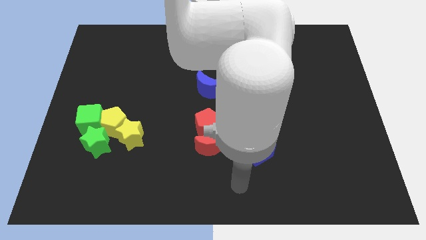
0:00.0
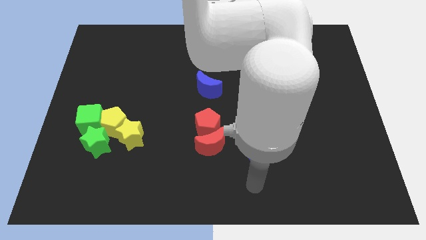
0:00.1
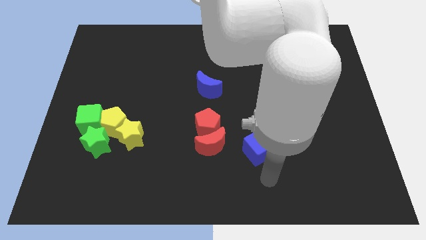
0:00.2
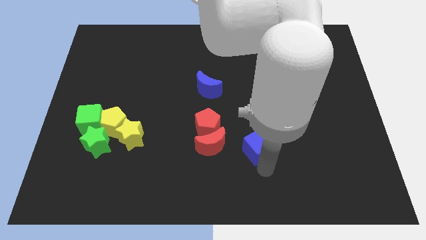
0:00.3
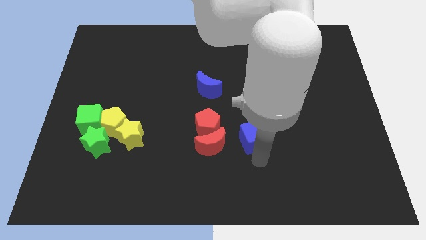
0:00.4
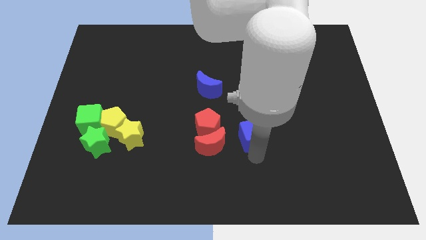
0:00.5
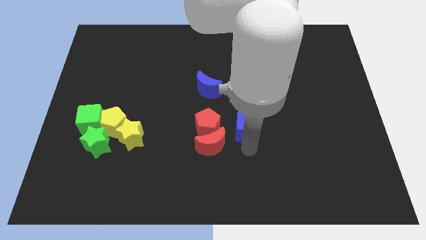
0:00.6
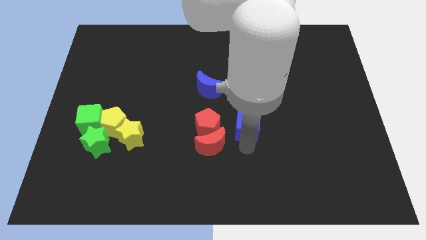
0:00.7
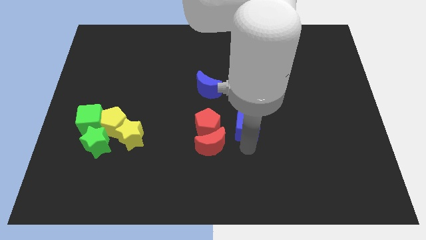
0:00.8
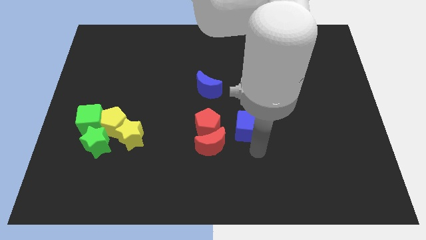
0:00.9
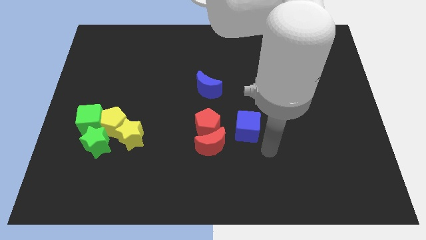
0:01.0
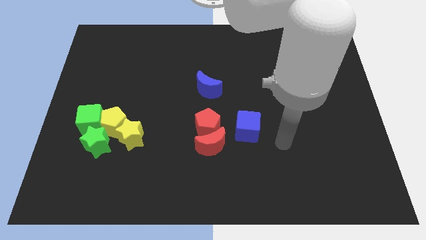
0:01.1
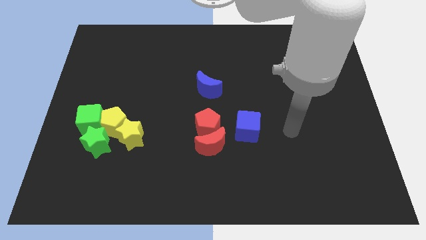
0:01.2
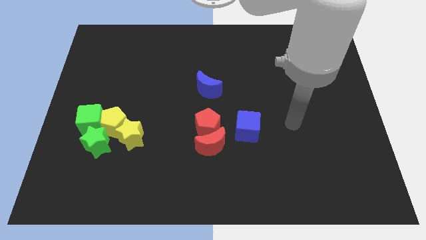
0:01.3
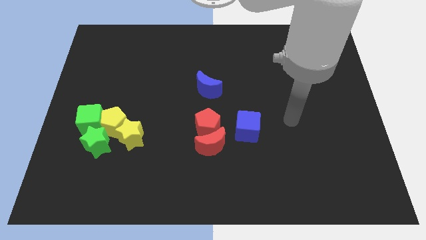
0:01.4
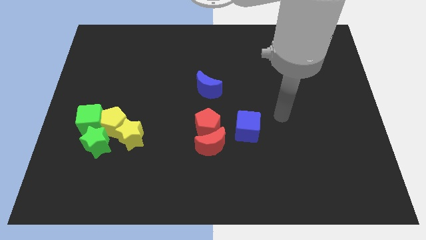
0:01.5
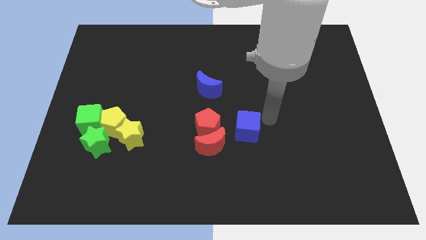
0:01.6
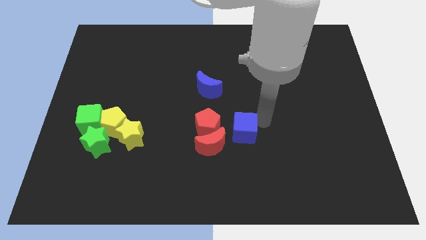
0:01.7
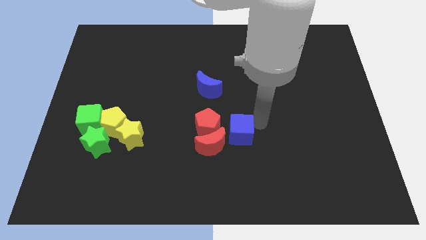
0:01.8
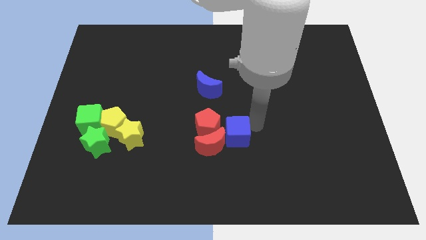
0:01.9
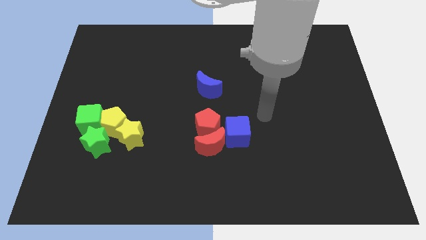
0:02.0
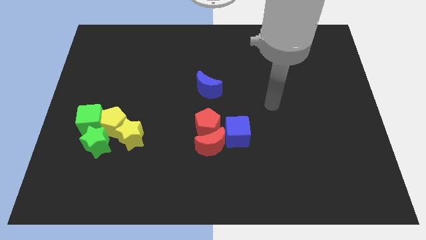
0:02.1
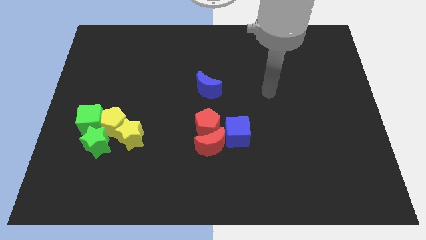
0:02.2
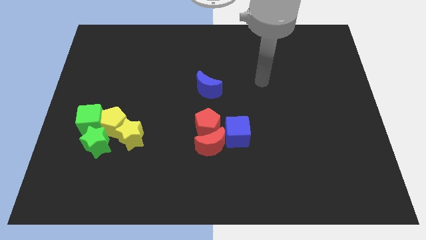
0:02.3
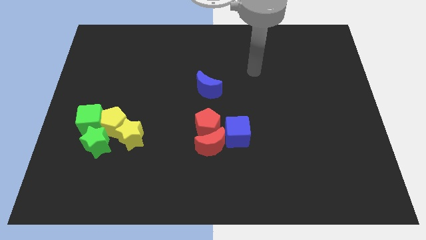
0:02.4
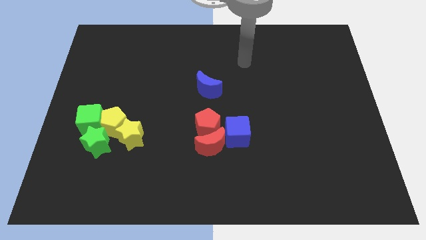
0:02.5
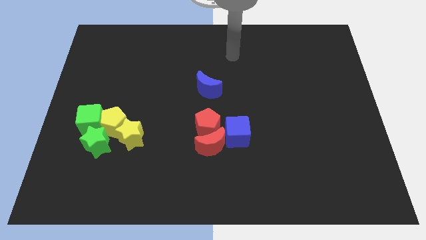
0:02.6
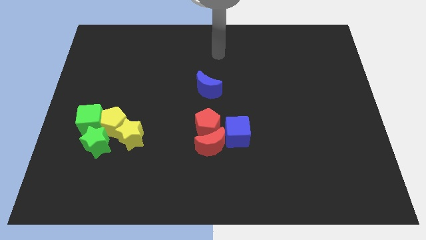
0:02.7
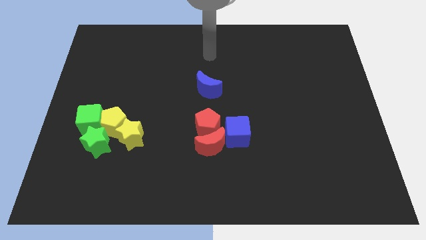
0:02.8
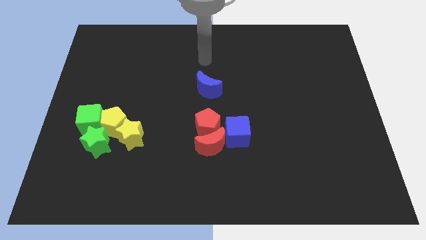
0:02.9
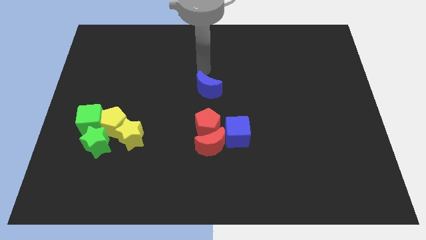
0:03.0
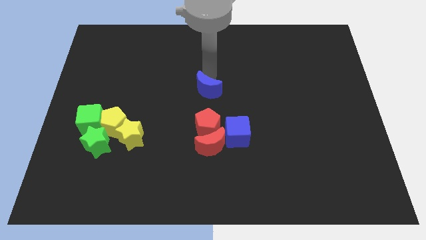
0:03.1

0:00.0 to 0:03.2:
make a group of red crescent red pentagon along with the blue cube and blue crescent

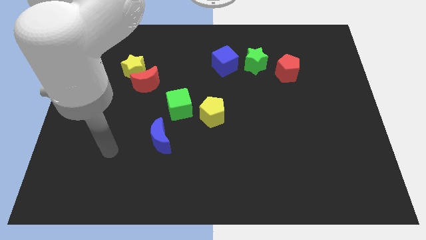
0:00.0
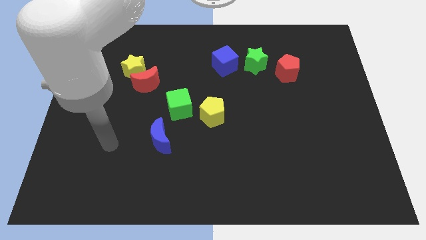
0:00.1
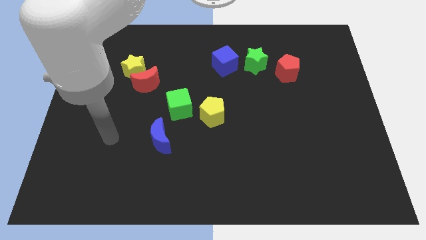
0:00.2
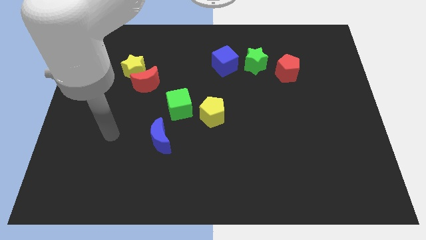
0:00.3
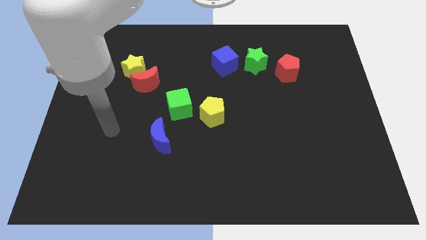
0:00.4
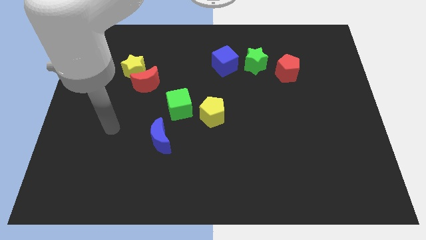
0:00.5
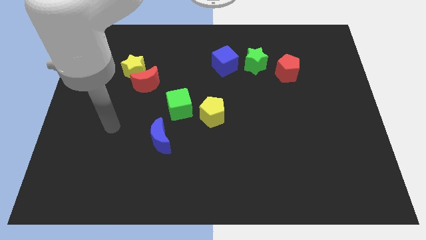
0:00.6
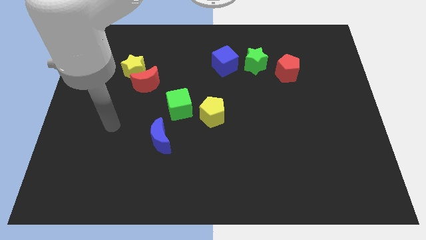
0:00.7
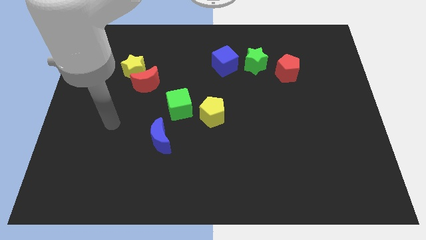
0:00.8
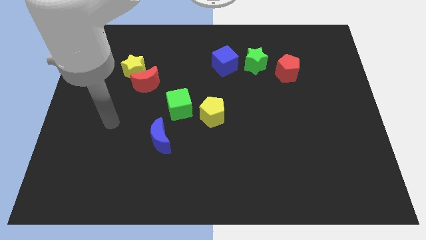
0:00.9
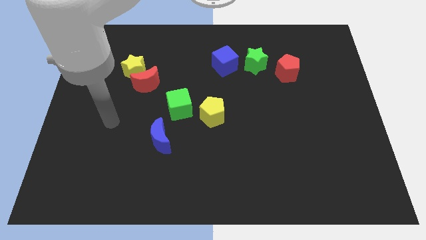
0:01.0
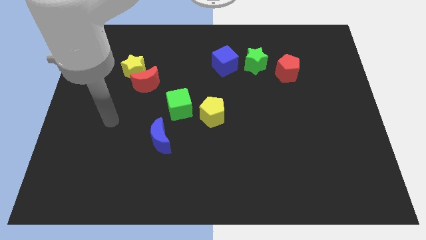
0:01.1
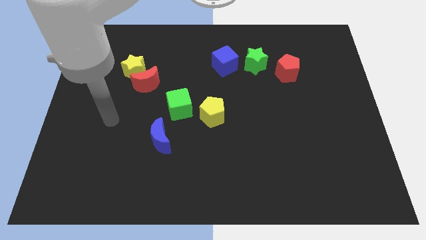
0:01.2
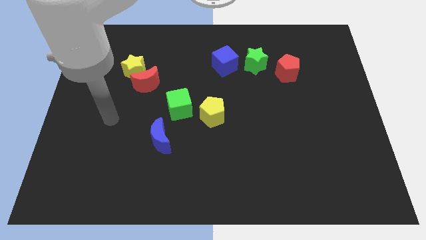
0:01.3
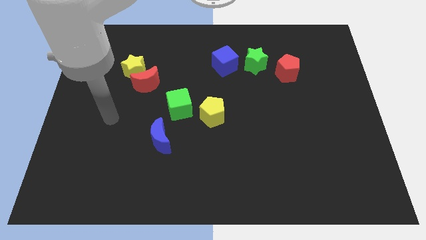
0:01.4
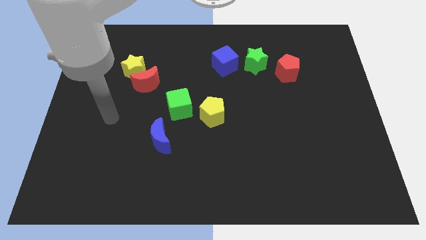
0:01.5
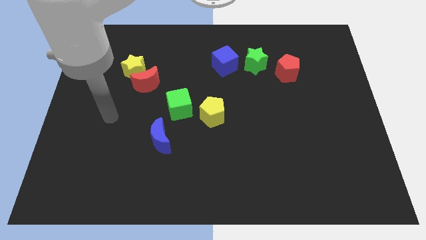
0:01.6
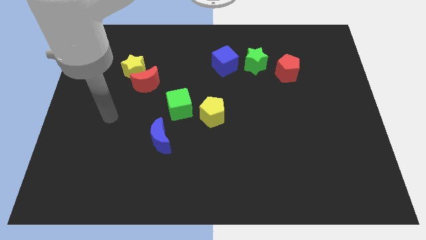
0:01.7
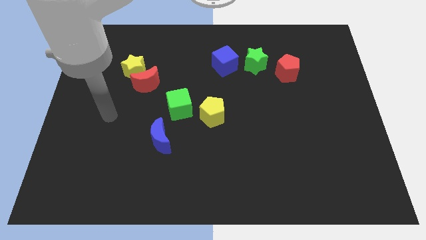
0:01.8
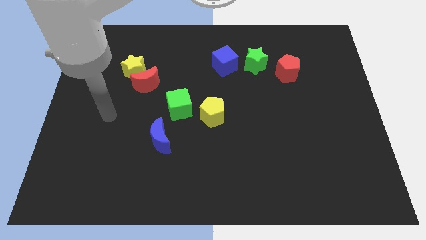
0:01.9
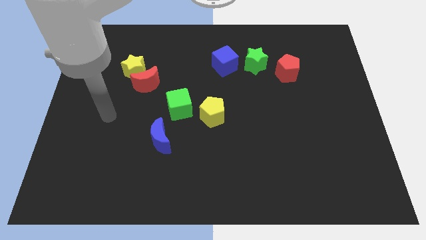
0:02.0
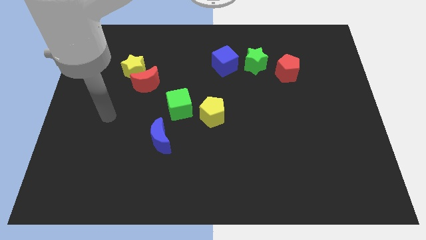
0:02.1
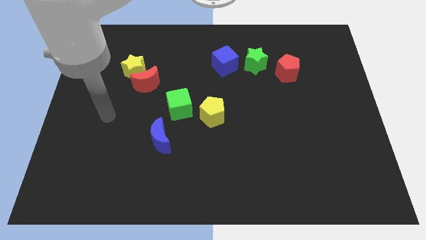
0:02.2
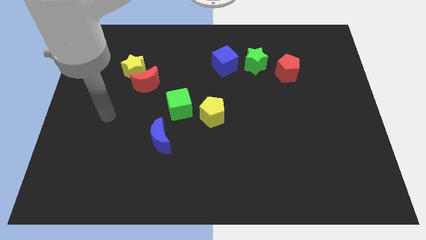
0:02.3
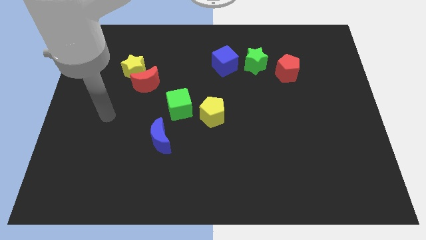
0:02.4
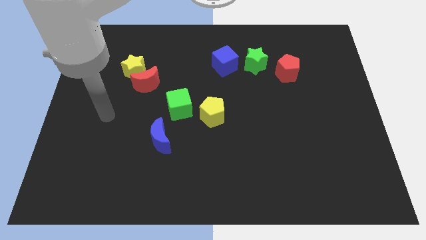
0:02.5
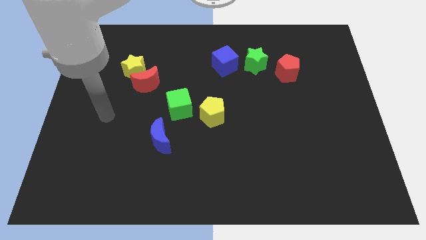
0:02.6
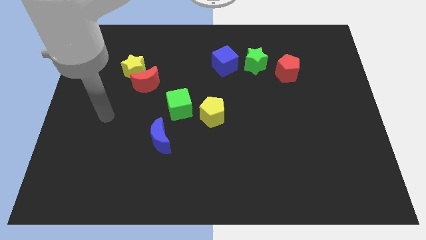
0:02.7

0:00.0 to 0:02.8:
slightly move the arm to the upside of the board

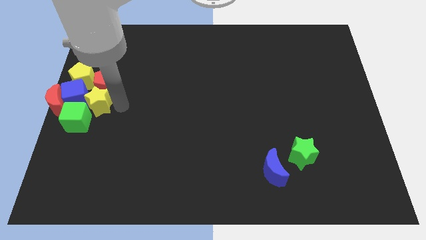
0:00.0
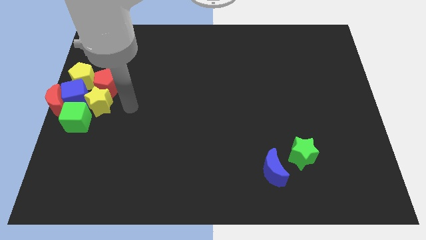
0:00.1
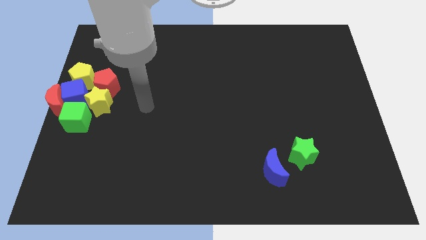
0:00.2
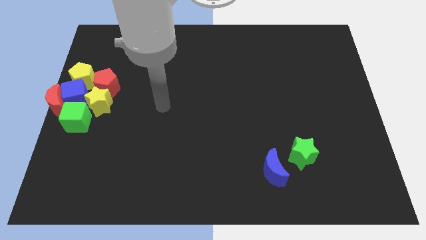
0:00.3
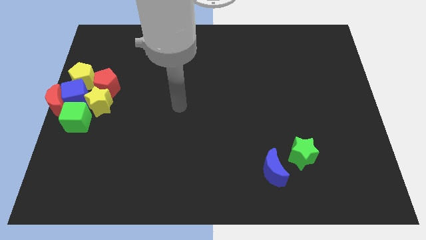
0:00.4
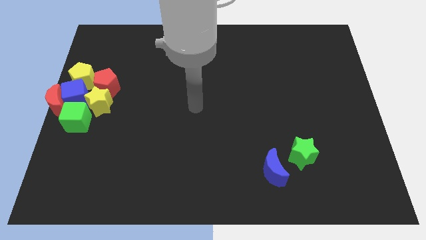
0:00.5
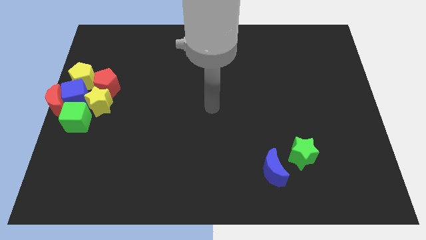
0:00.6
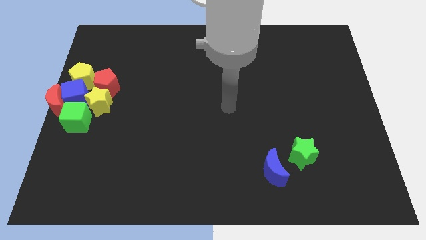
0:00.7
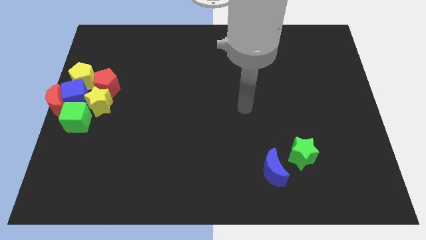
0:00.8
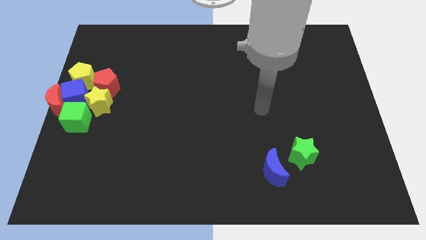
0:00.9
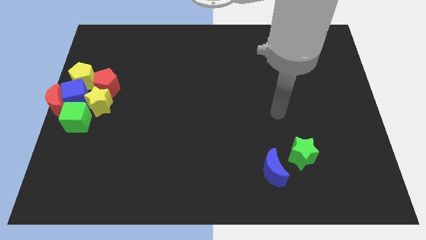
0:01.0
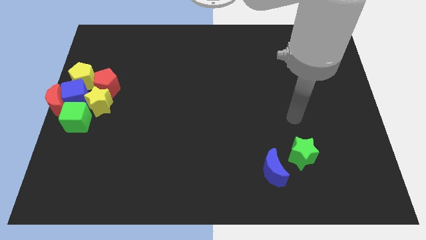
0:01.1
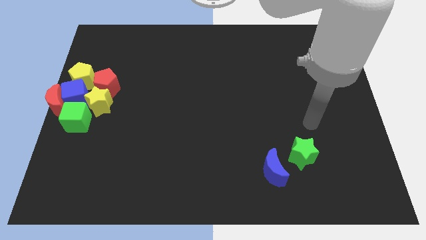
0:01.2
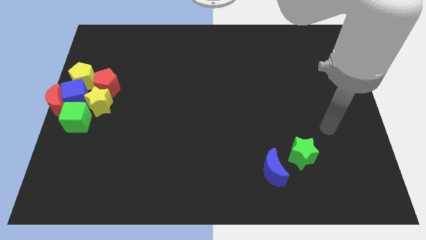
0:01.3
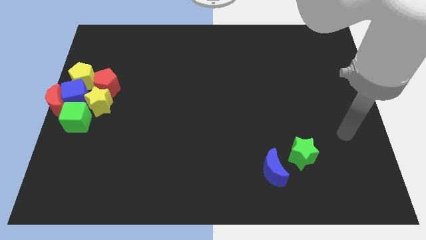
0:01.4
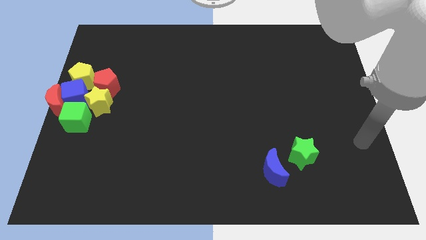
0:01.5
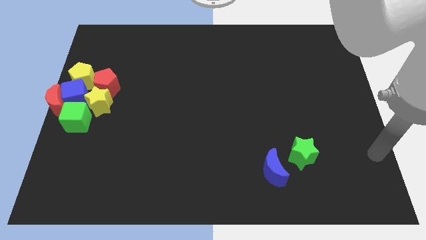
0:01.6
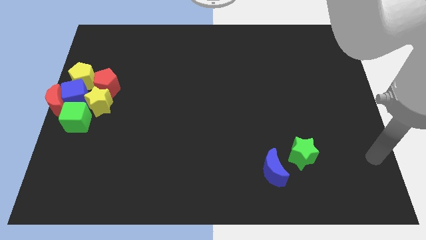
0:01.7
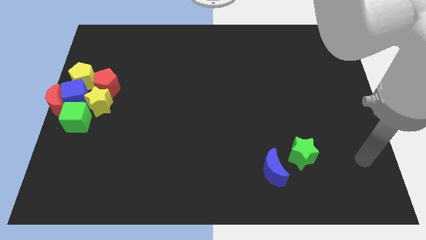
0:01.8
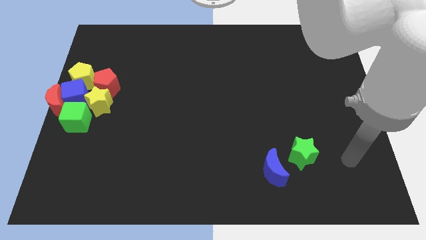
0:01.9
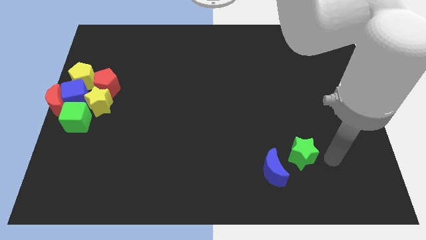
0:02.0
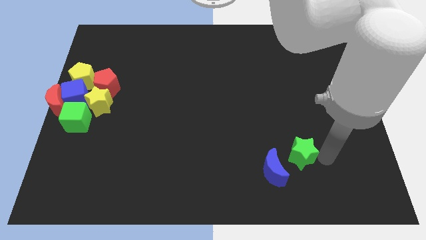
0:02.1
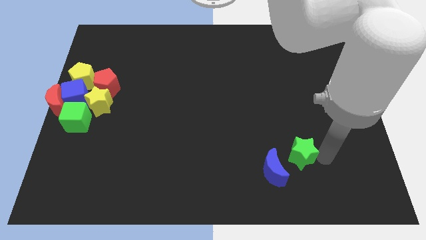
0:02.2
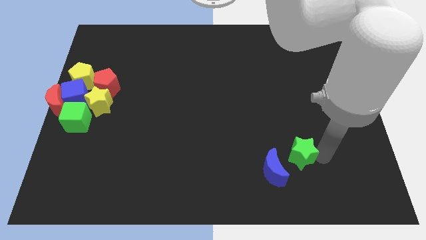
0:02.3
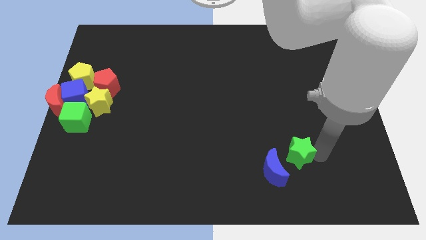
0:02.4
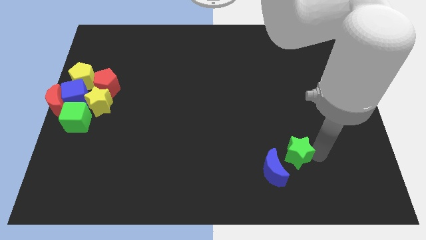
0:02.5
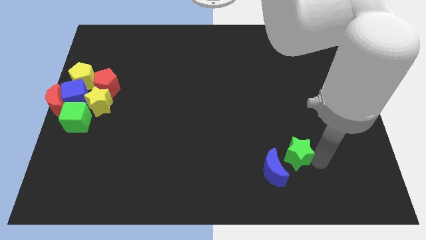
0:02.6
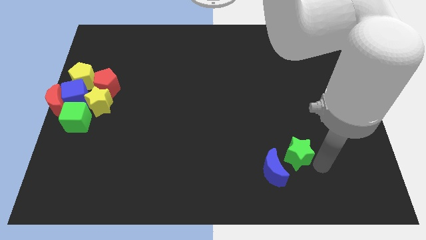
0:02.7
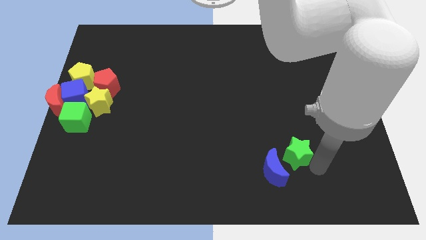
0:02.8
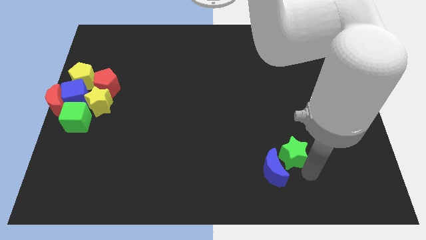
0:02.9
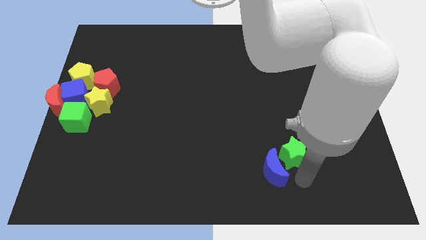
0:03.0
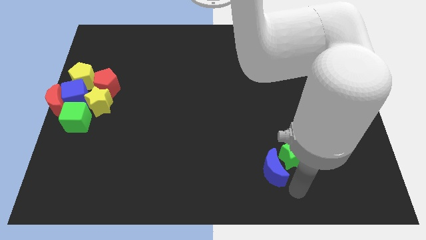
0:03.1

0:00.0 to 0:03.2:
place the green star slightly to the right of the blue crescent
